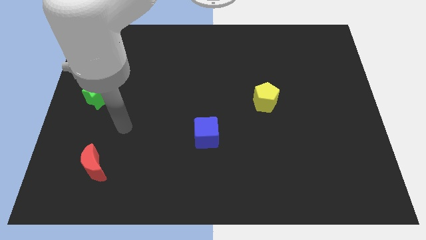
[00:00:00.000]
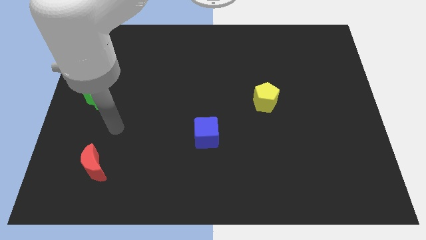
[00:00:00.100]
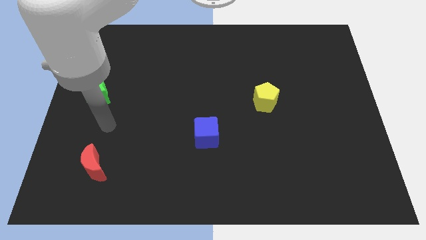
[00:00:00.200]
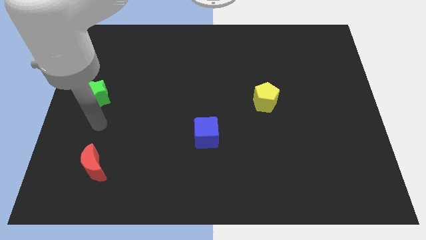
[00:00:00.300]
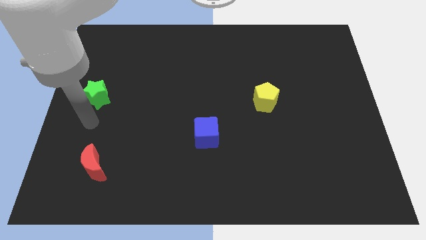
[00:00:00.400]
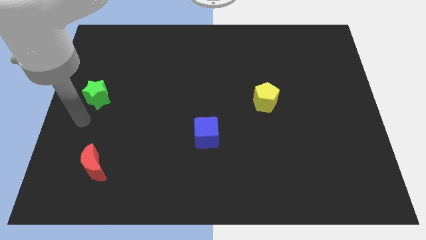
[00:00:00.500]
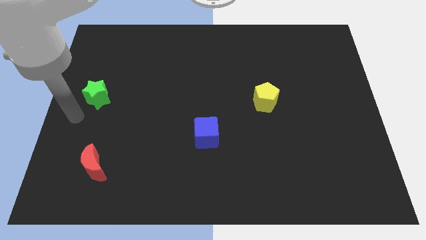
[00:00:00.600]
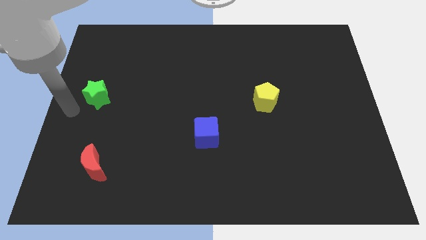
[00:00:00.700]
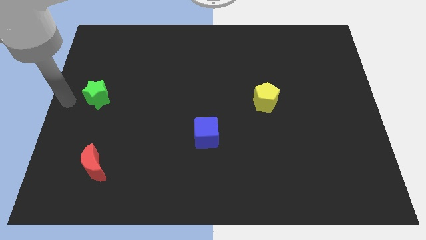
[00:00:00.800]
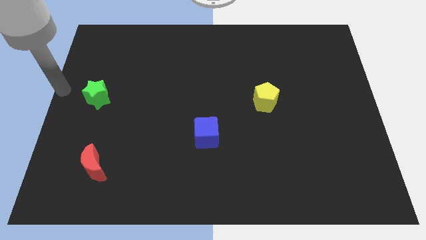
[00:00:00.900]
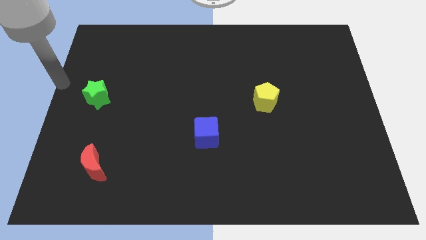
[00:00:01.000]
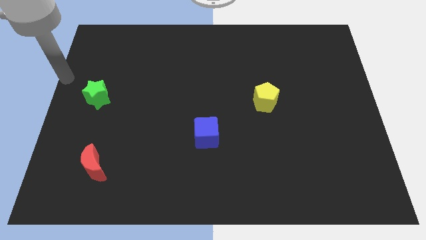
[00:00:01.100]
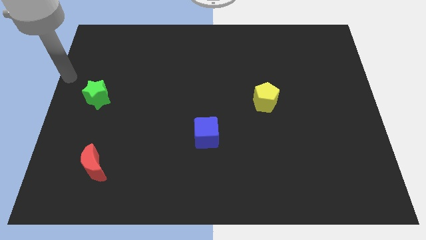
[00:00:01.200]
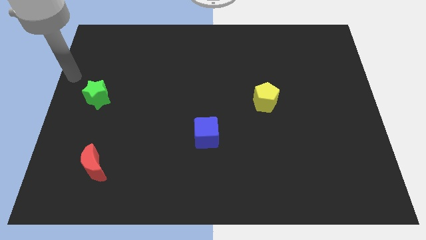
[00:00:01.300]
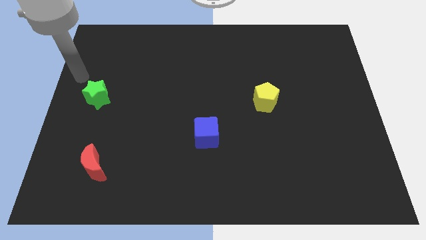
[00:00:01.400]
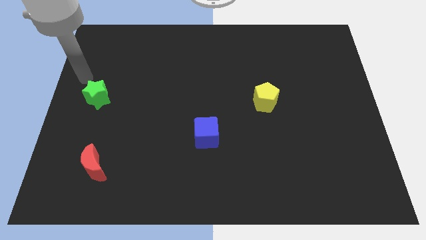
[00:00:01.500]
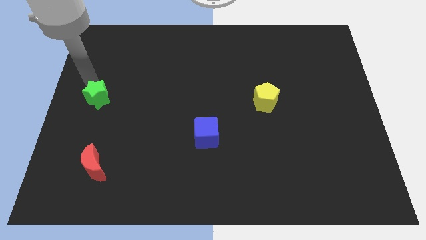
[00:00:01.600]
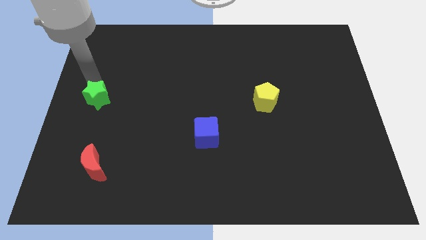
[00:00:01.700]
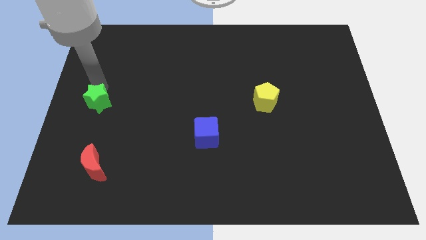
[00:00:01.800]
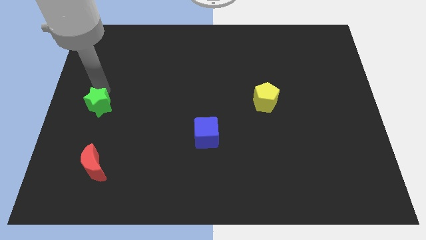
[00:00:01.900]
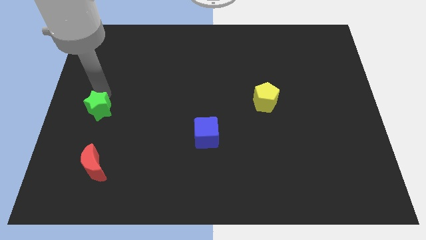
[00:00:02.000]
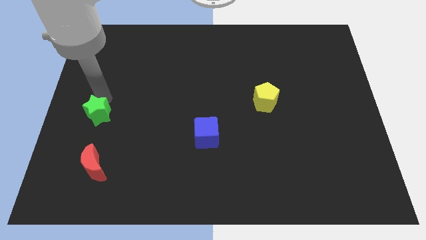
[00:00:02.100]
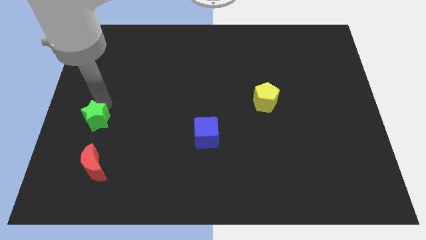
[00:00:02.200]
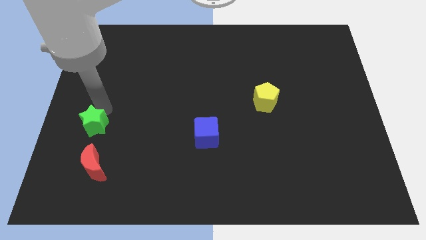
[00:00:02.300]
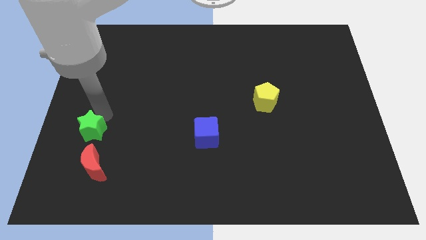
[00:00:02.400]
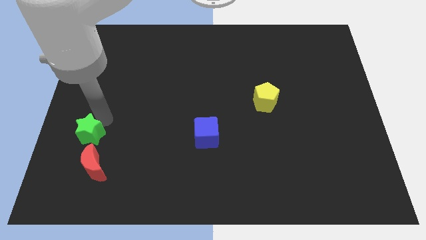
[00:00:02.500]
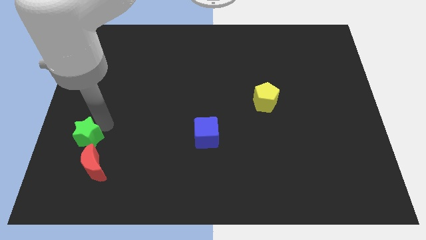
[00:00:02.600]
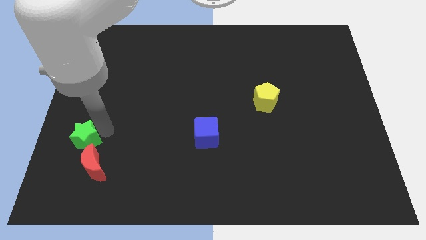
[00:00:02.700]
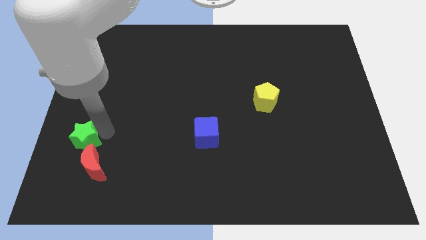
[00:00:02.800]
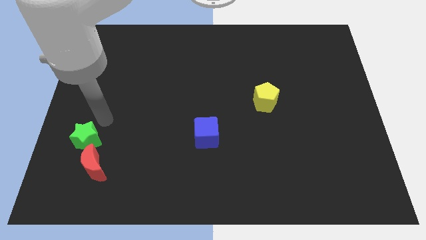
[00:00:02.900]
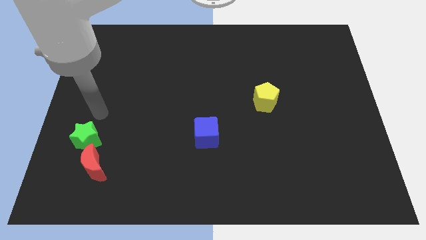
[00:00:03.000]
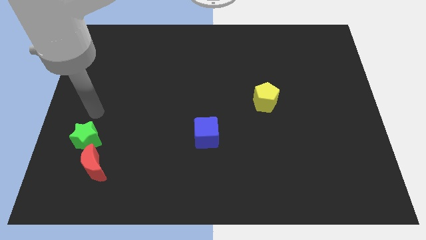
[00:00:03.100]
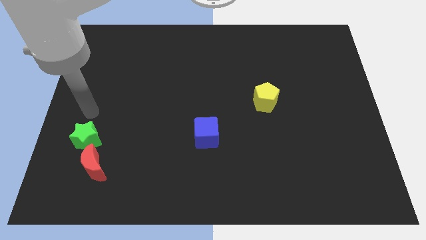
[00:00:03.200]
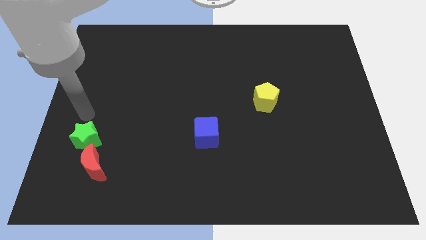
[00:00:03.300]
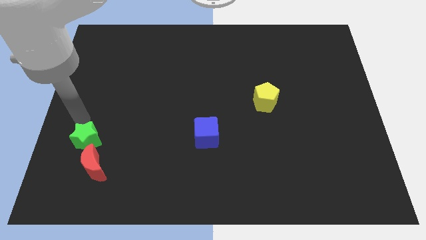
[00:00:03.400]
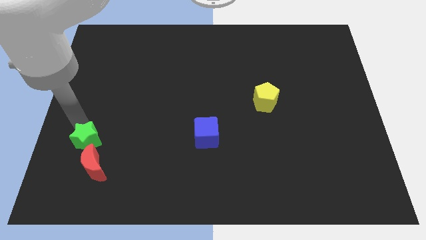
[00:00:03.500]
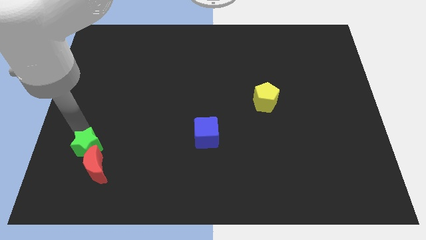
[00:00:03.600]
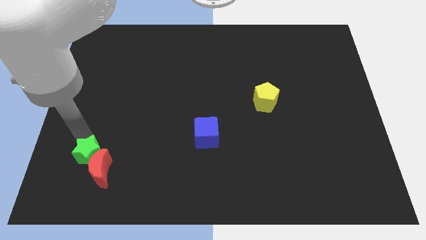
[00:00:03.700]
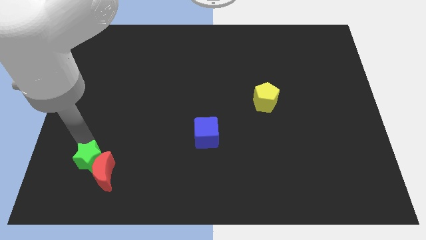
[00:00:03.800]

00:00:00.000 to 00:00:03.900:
push the green star to the moon

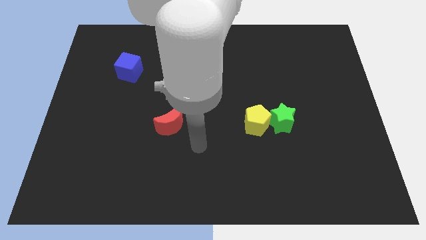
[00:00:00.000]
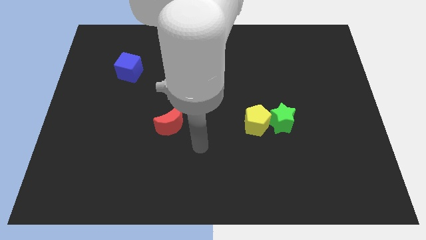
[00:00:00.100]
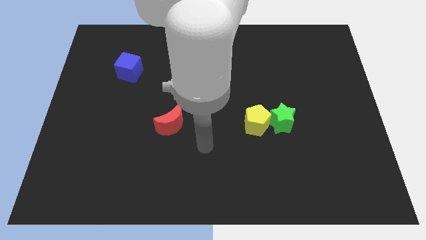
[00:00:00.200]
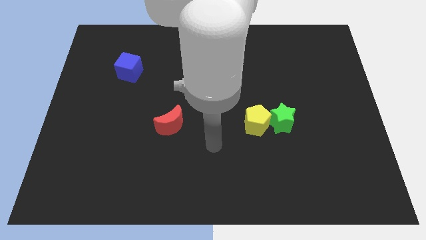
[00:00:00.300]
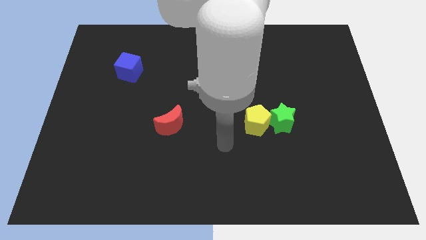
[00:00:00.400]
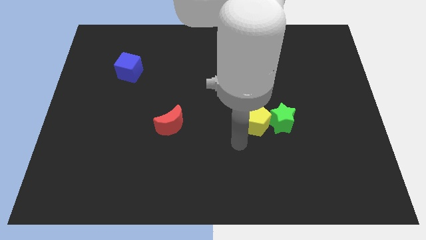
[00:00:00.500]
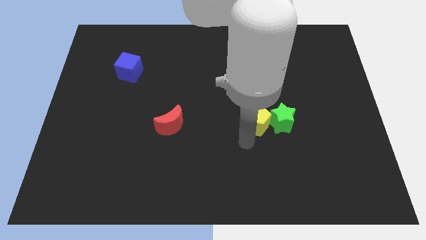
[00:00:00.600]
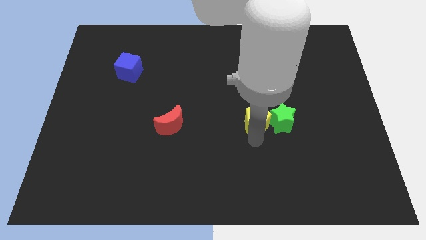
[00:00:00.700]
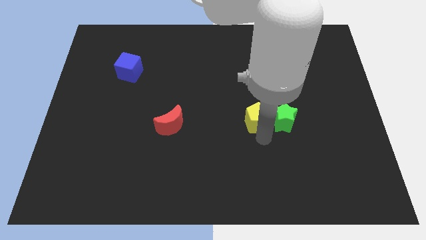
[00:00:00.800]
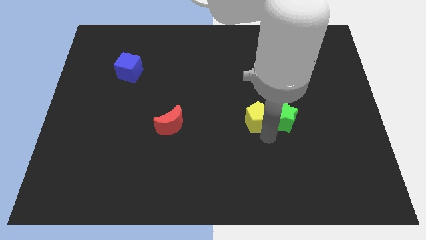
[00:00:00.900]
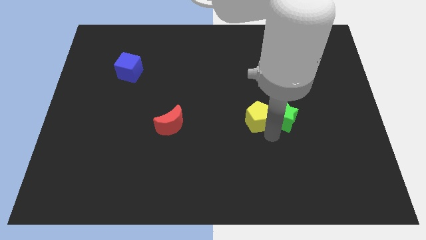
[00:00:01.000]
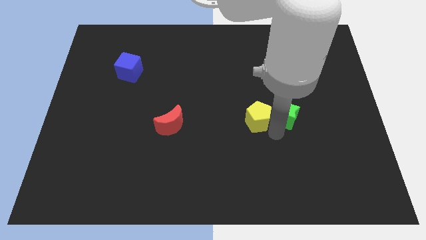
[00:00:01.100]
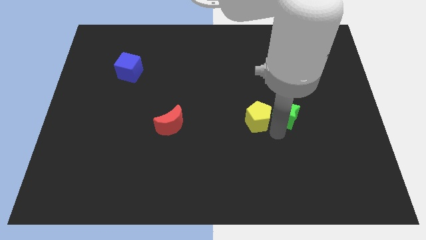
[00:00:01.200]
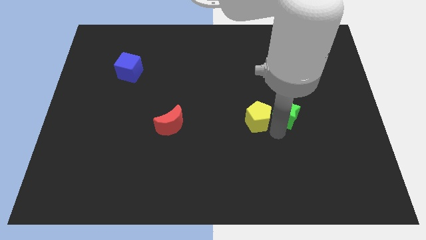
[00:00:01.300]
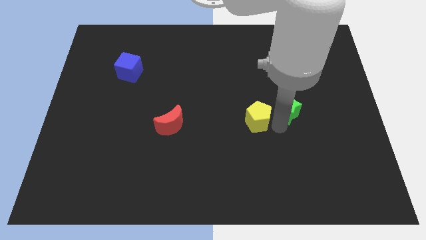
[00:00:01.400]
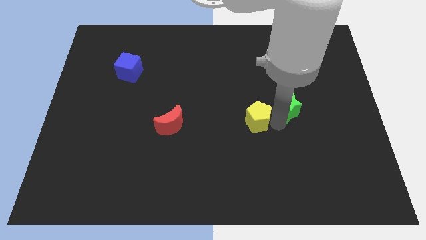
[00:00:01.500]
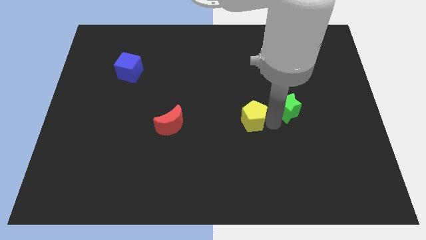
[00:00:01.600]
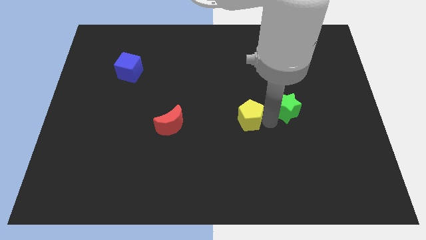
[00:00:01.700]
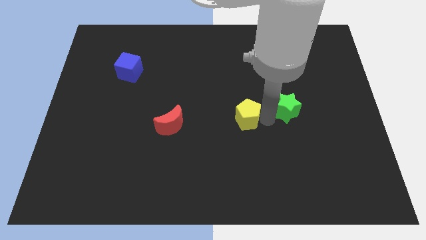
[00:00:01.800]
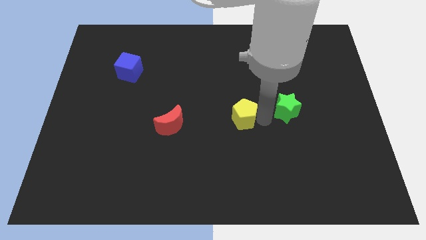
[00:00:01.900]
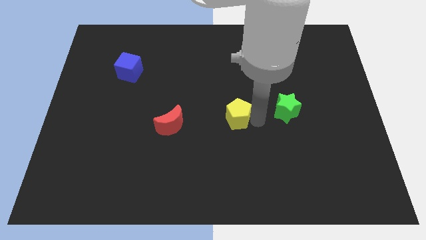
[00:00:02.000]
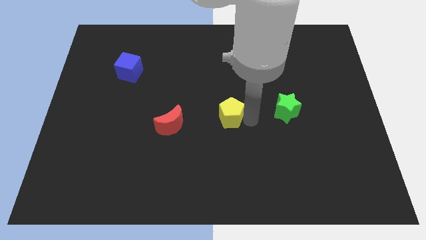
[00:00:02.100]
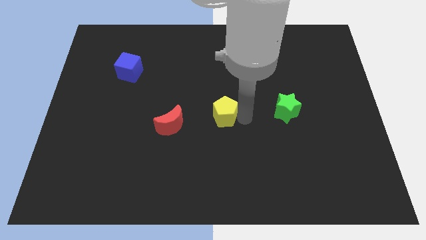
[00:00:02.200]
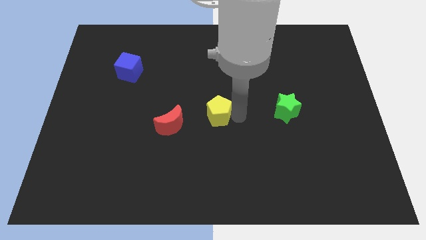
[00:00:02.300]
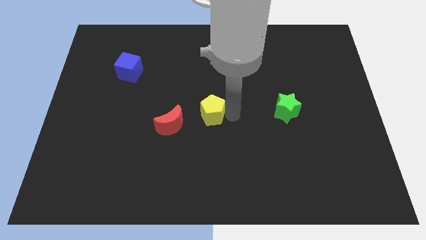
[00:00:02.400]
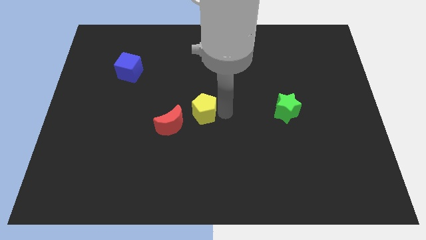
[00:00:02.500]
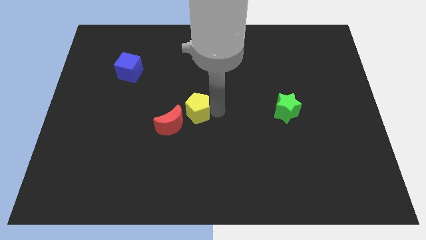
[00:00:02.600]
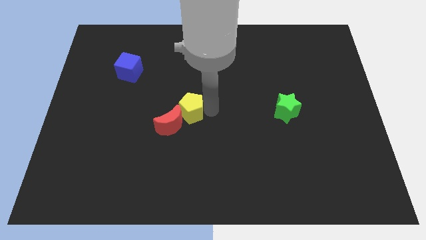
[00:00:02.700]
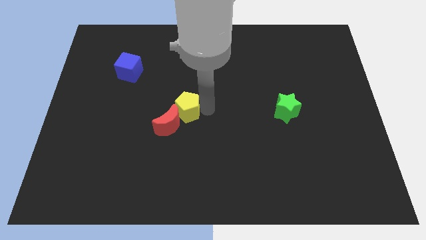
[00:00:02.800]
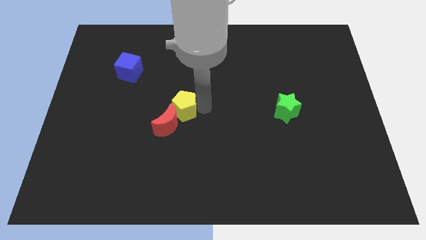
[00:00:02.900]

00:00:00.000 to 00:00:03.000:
slide the yellow block next to the red block

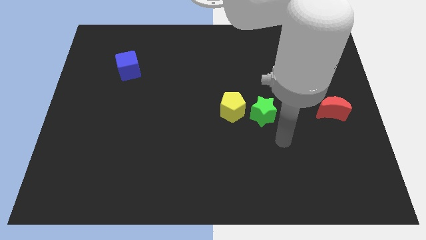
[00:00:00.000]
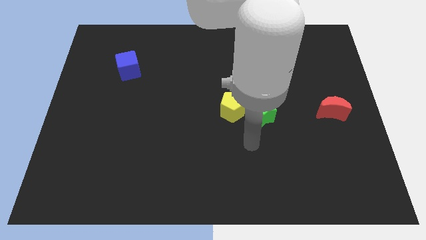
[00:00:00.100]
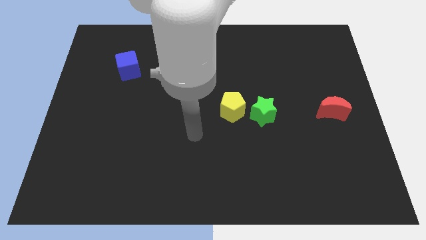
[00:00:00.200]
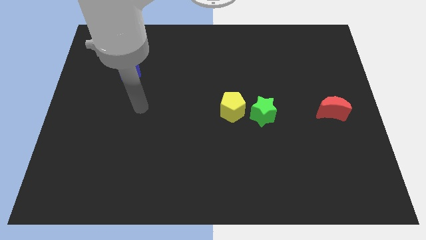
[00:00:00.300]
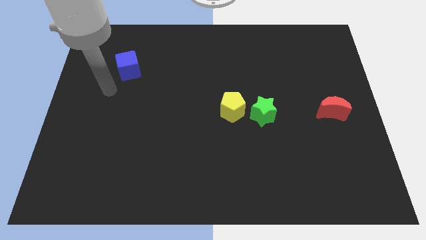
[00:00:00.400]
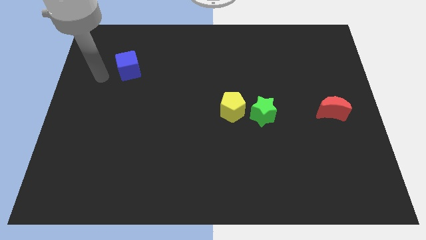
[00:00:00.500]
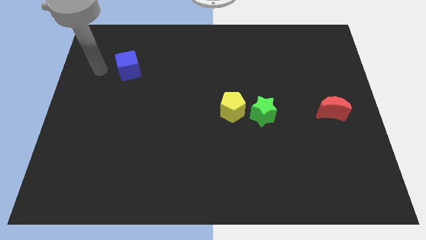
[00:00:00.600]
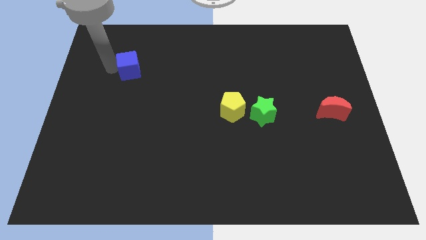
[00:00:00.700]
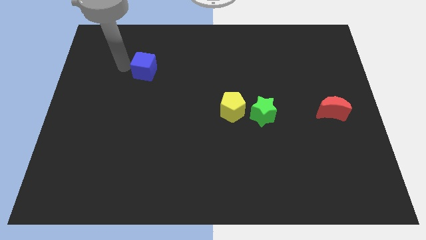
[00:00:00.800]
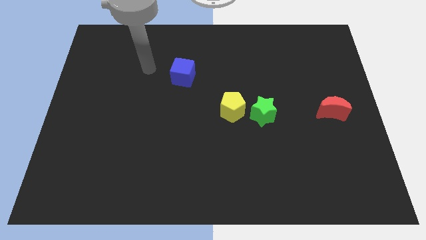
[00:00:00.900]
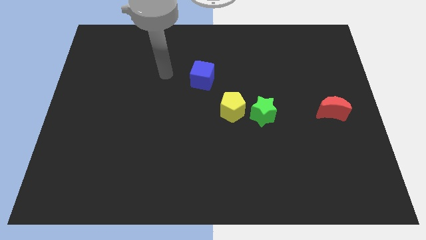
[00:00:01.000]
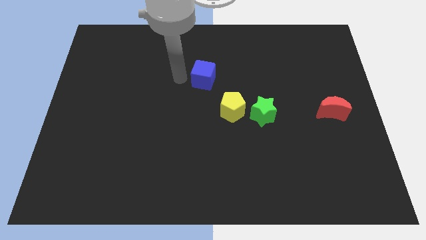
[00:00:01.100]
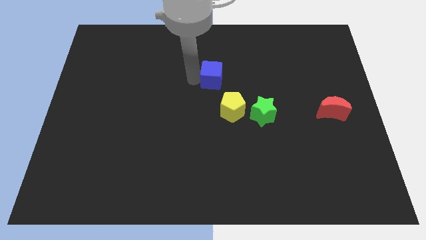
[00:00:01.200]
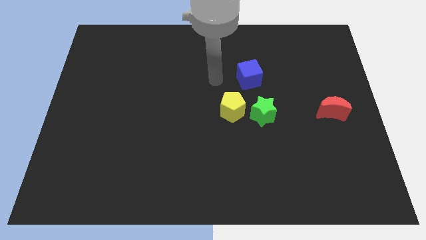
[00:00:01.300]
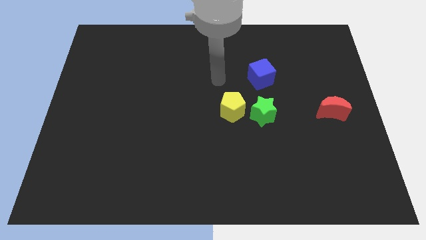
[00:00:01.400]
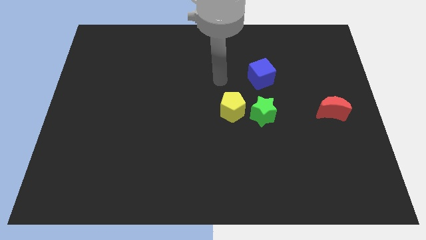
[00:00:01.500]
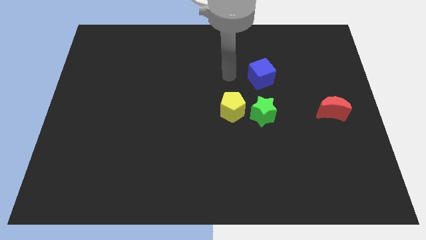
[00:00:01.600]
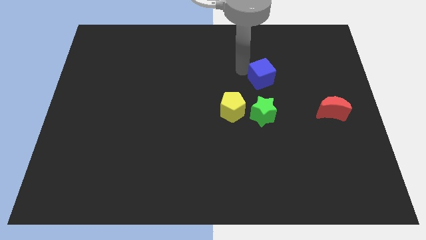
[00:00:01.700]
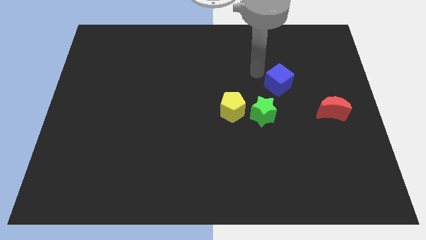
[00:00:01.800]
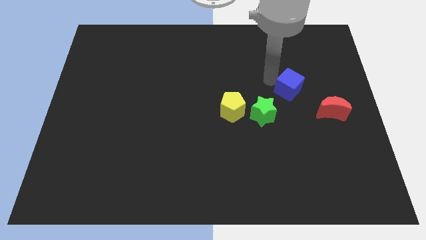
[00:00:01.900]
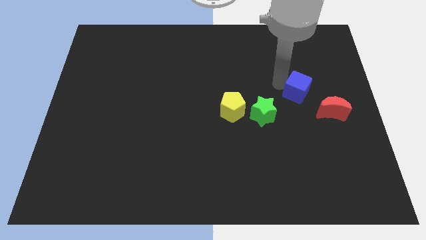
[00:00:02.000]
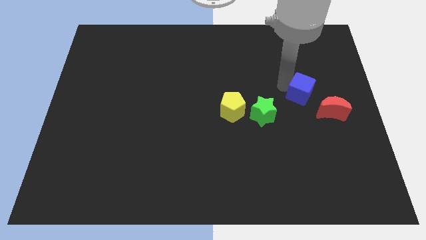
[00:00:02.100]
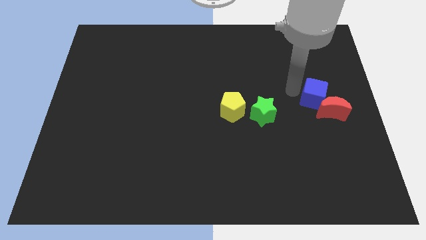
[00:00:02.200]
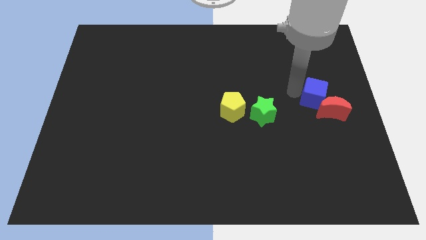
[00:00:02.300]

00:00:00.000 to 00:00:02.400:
move the blue block towards the red moon
